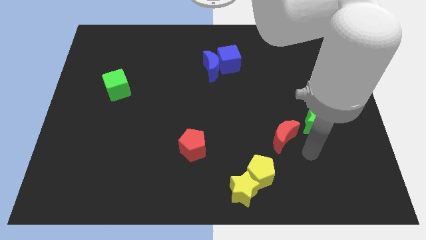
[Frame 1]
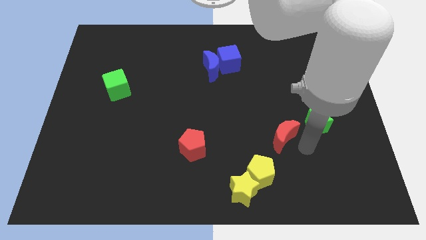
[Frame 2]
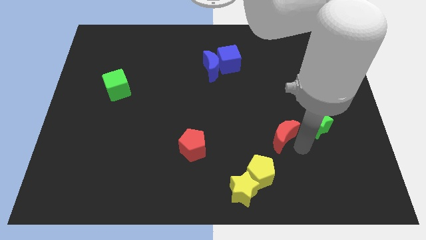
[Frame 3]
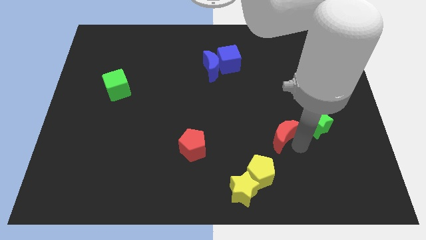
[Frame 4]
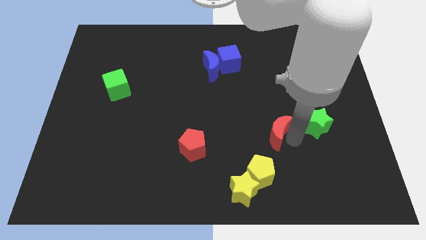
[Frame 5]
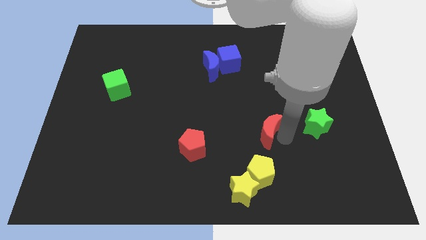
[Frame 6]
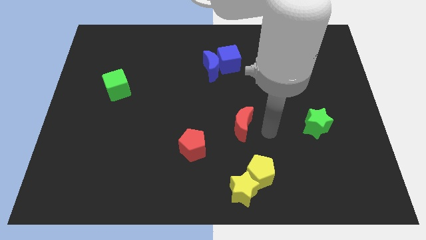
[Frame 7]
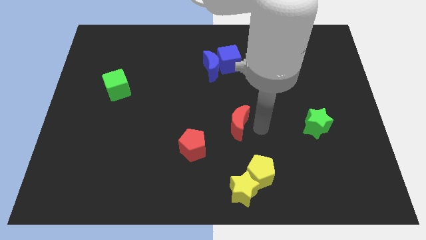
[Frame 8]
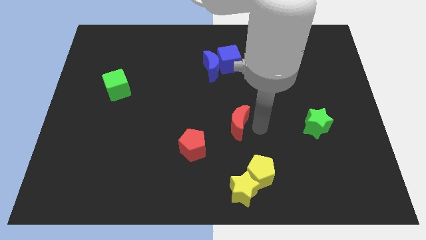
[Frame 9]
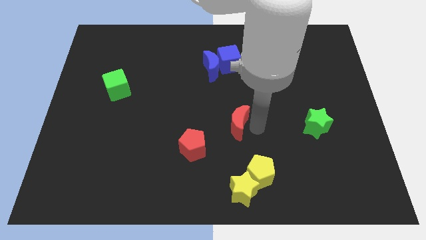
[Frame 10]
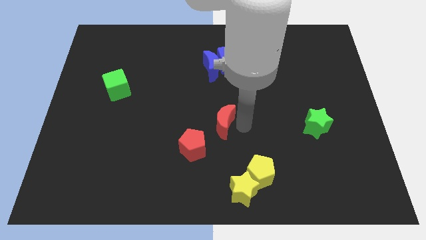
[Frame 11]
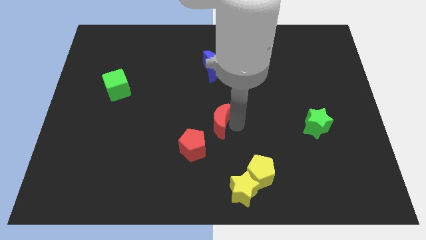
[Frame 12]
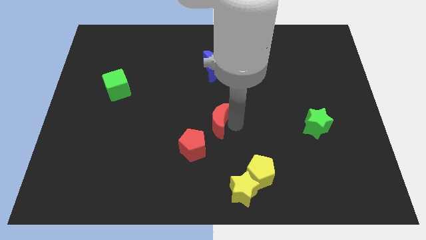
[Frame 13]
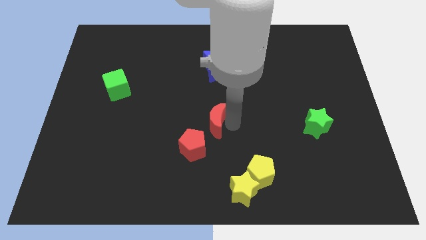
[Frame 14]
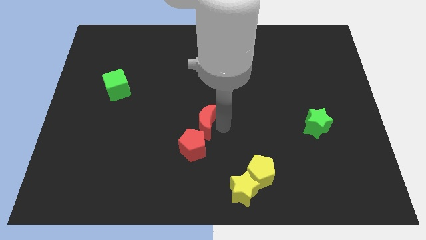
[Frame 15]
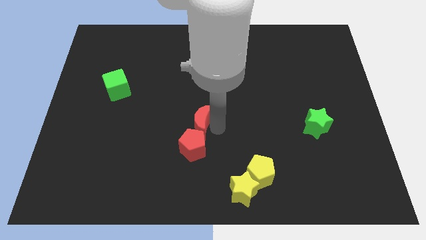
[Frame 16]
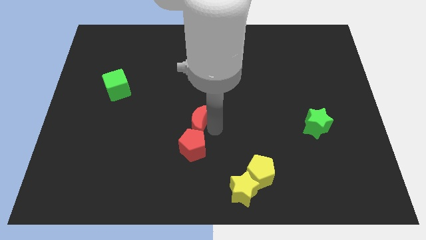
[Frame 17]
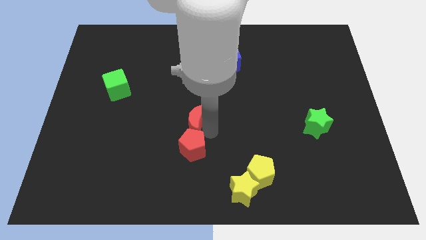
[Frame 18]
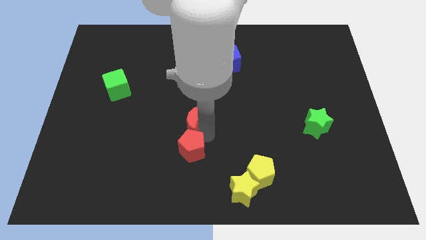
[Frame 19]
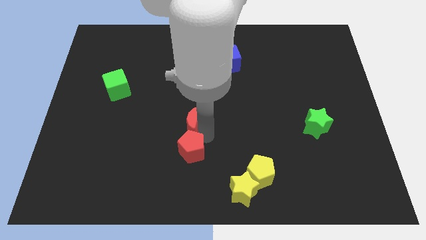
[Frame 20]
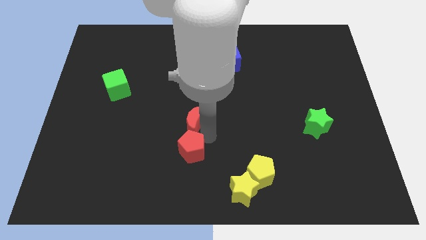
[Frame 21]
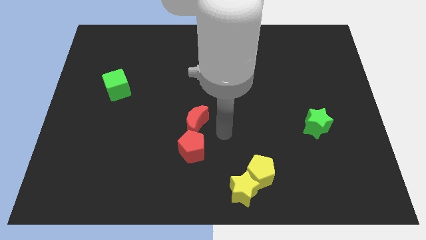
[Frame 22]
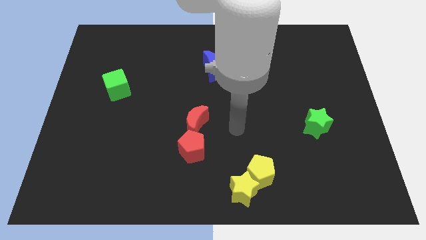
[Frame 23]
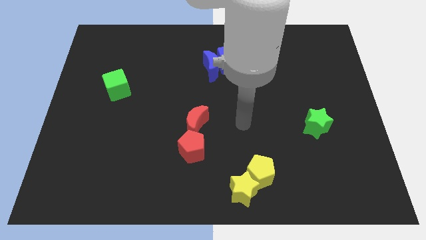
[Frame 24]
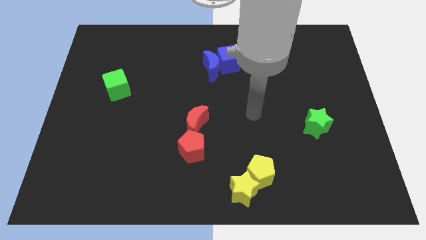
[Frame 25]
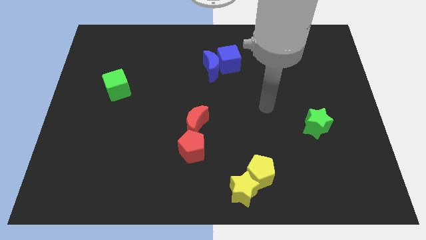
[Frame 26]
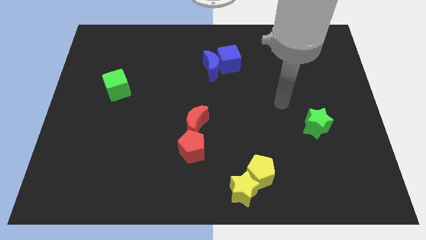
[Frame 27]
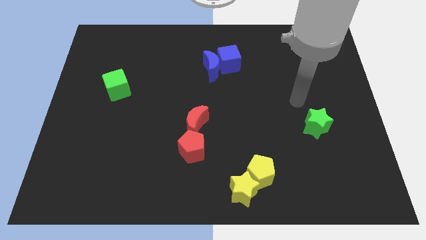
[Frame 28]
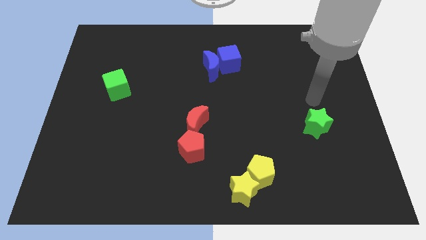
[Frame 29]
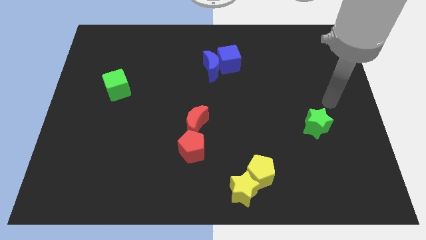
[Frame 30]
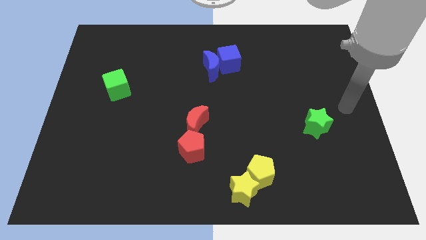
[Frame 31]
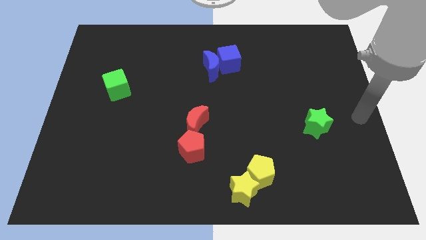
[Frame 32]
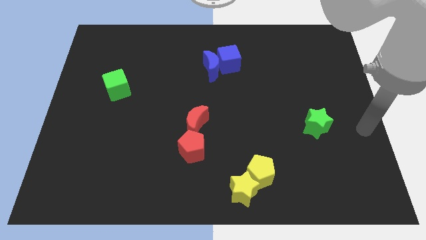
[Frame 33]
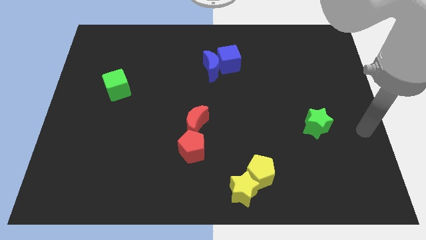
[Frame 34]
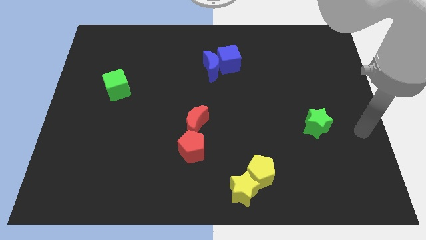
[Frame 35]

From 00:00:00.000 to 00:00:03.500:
place the red crescent to the top of red pentagon

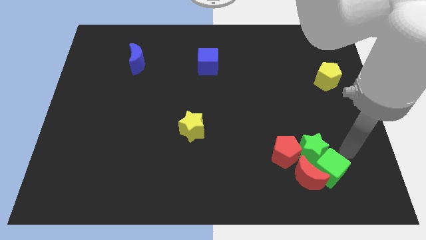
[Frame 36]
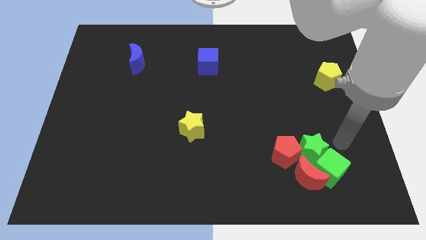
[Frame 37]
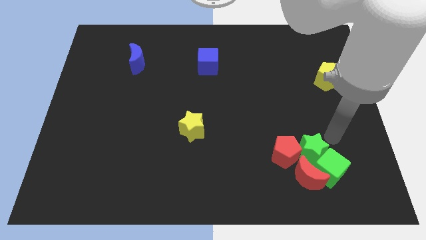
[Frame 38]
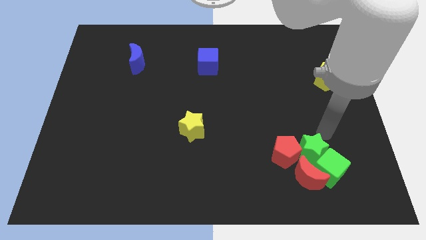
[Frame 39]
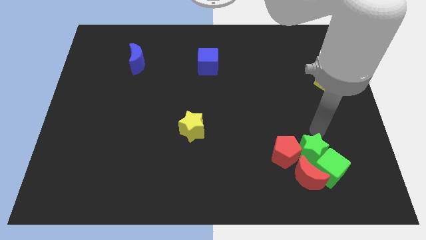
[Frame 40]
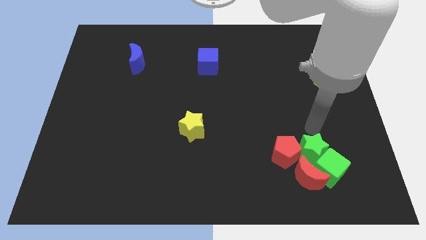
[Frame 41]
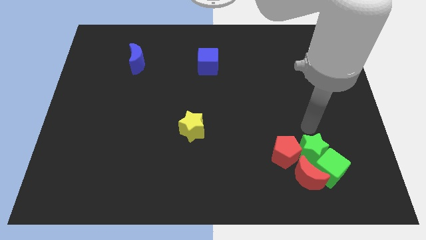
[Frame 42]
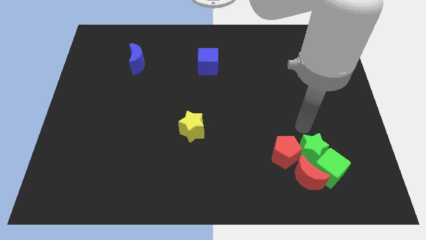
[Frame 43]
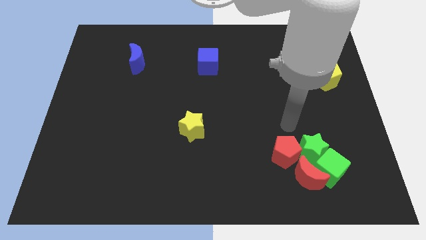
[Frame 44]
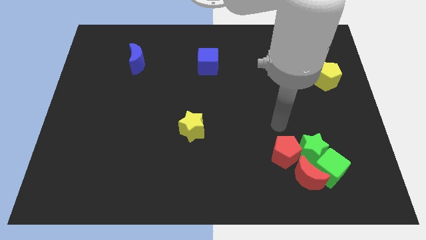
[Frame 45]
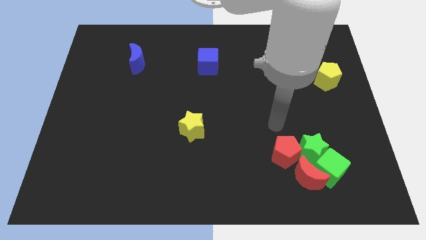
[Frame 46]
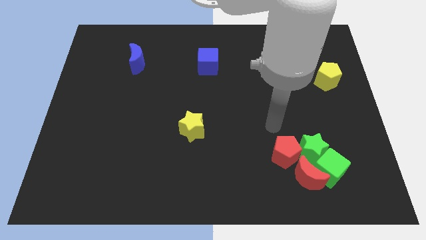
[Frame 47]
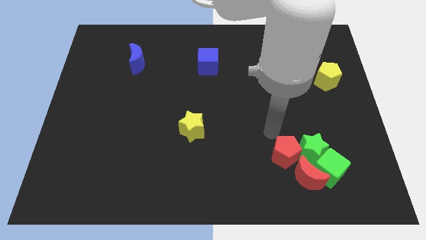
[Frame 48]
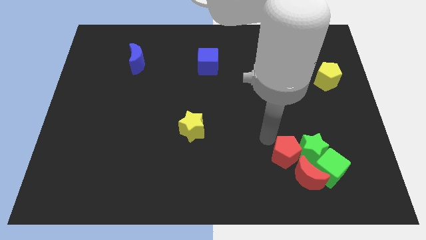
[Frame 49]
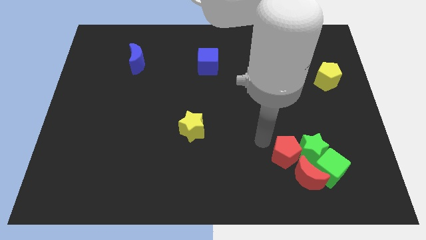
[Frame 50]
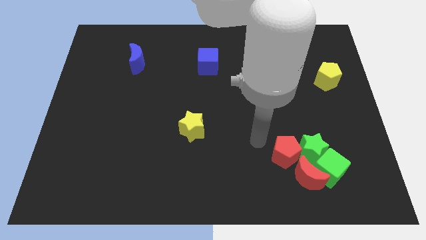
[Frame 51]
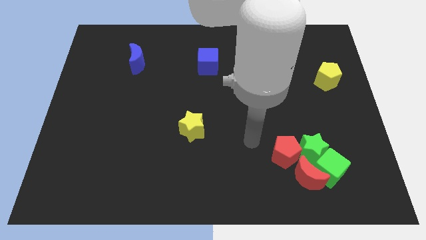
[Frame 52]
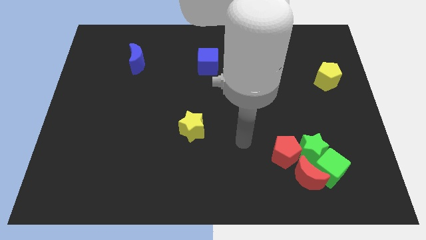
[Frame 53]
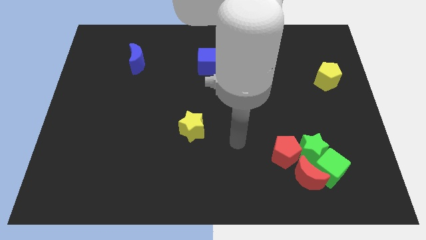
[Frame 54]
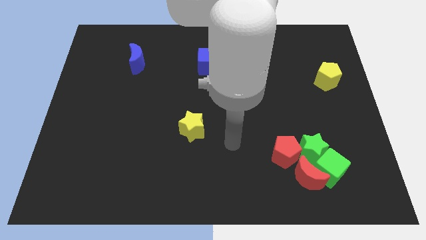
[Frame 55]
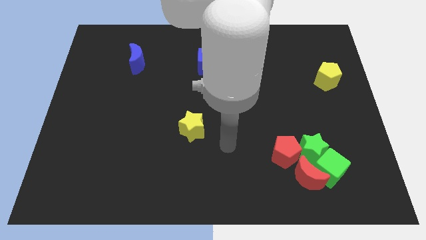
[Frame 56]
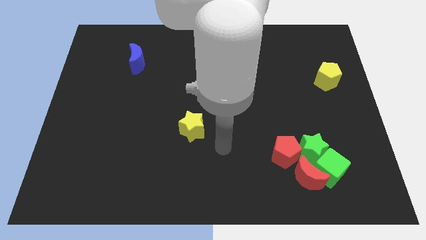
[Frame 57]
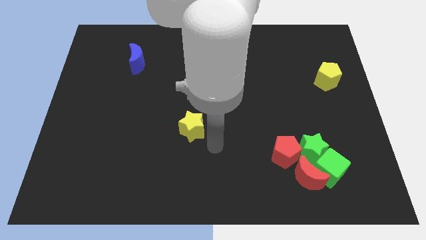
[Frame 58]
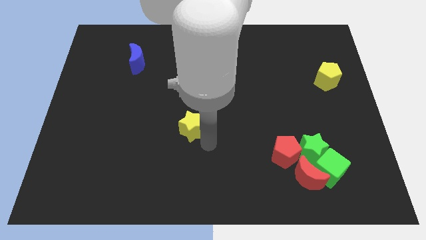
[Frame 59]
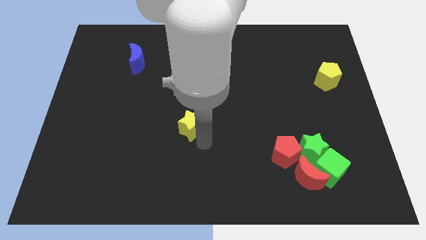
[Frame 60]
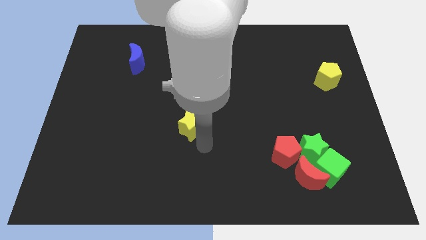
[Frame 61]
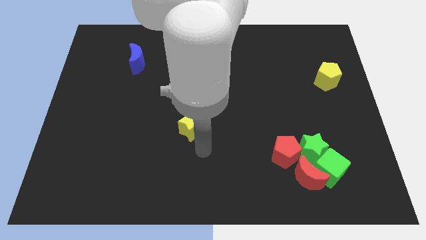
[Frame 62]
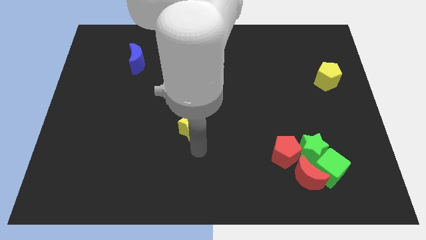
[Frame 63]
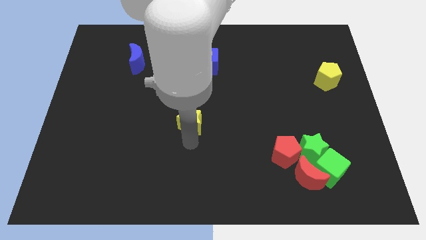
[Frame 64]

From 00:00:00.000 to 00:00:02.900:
point the arm below the yellow star

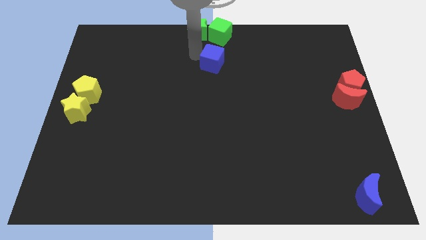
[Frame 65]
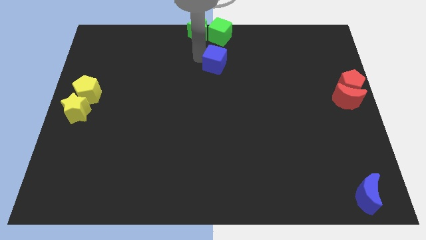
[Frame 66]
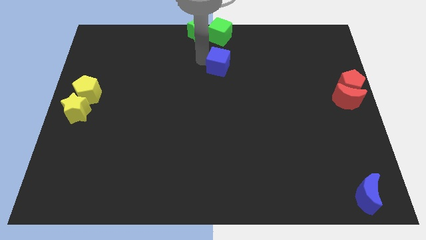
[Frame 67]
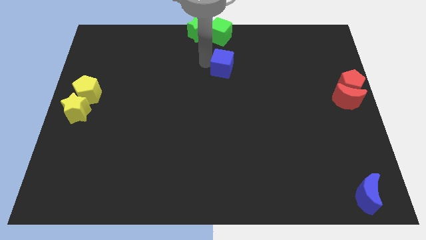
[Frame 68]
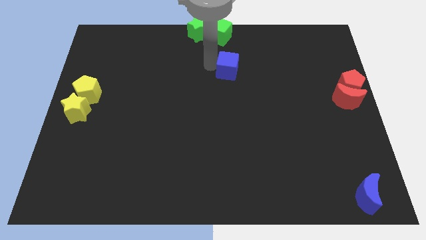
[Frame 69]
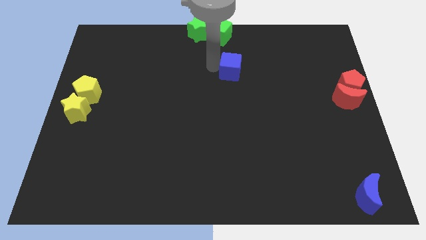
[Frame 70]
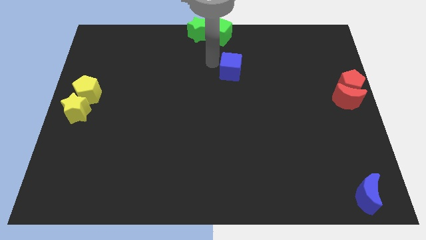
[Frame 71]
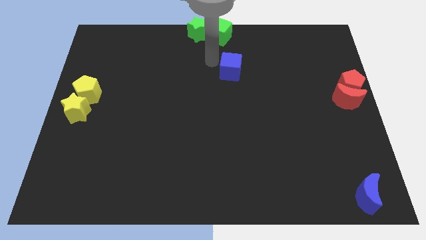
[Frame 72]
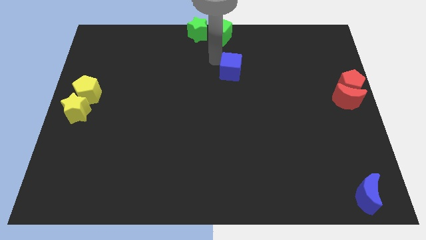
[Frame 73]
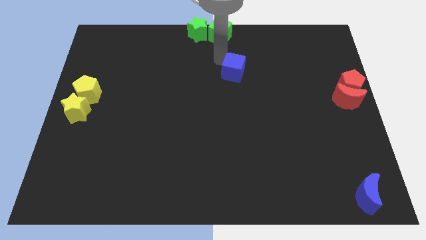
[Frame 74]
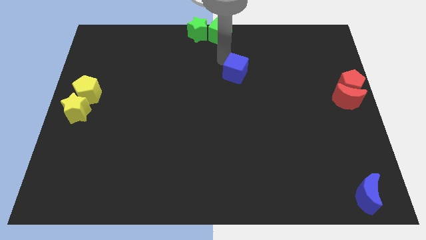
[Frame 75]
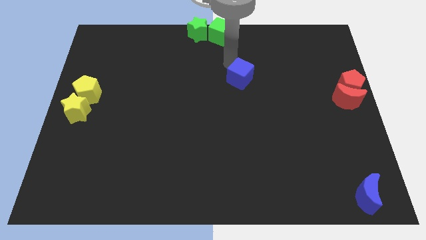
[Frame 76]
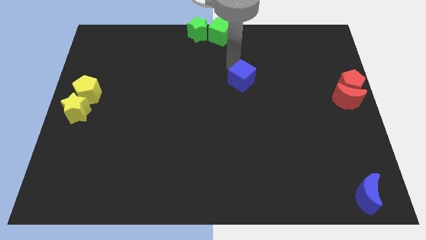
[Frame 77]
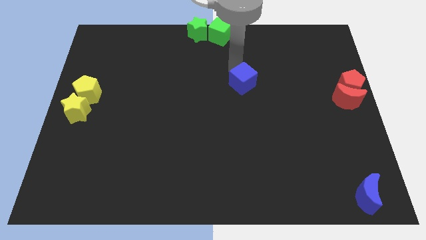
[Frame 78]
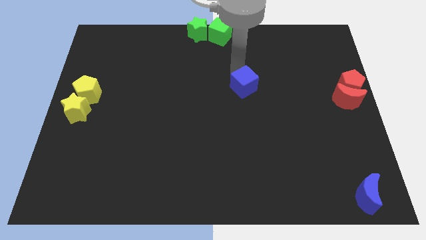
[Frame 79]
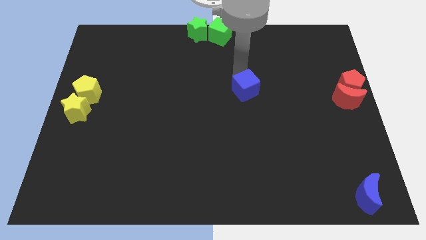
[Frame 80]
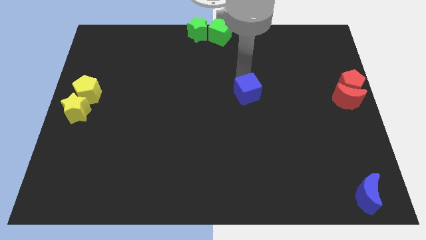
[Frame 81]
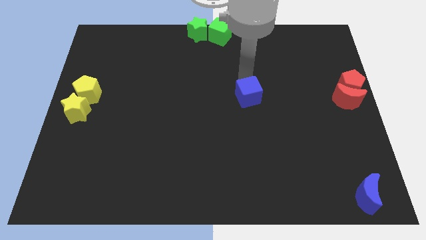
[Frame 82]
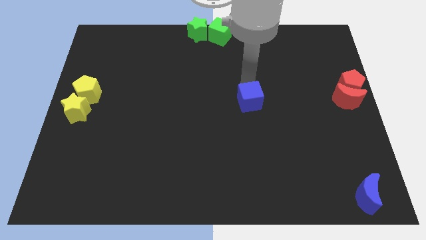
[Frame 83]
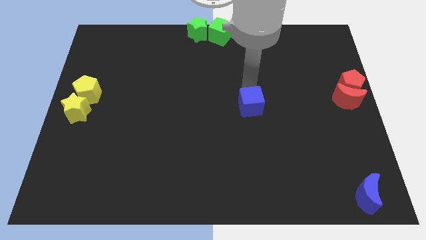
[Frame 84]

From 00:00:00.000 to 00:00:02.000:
move the blue cube towards the center of the board

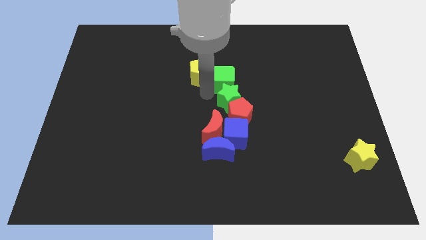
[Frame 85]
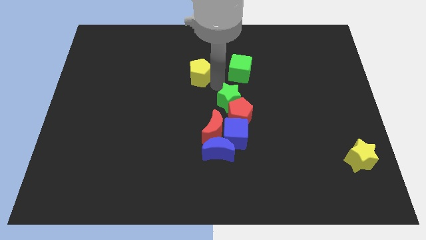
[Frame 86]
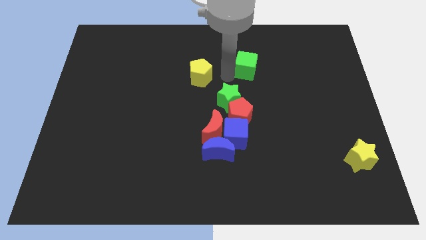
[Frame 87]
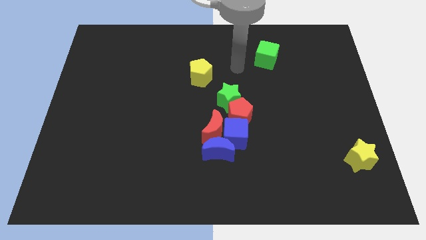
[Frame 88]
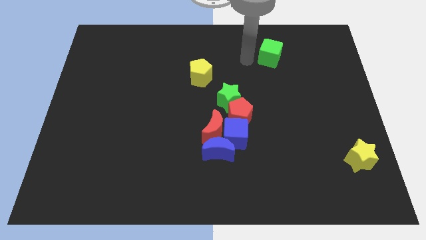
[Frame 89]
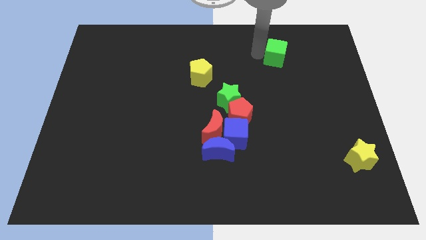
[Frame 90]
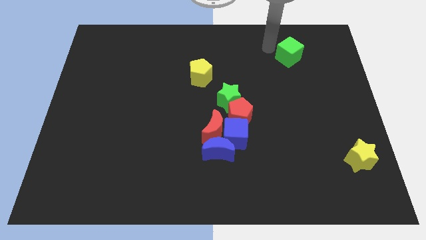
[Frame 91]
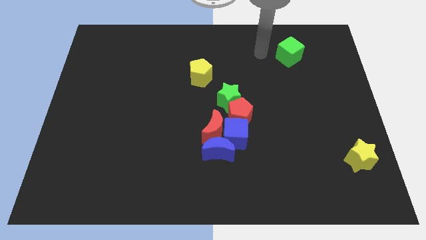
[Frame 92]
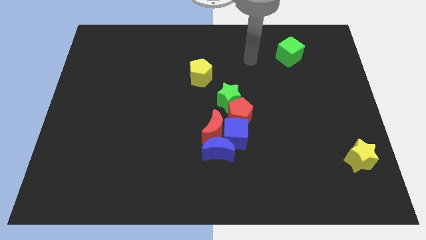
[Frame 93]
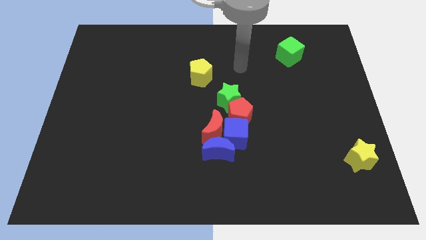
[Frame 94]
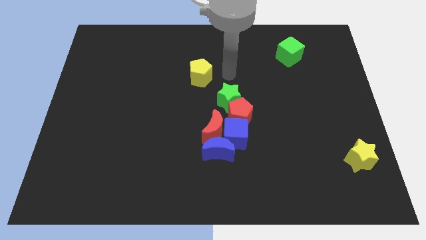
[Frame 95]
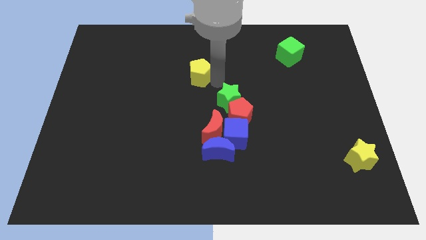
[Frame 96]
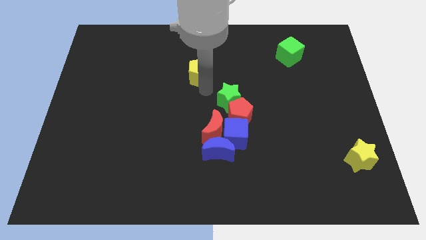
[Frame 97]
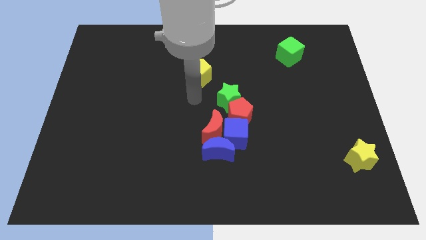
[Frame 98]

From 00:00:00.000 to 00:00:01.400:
separate the green cube from the group of blocks
